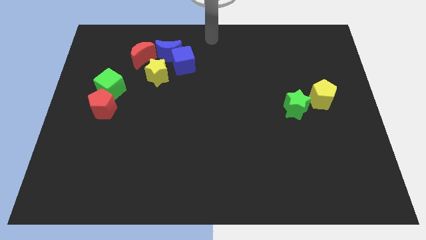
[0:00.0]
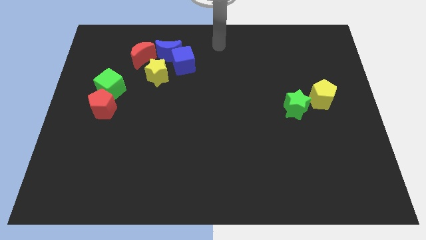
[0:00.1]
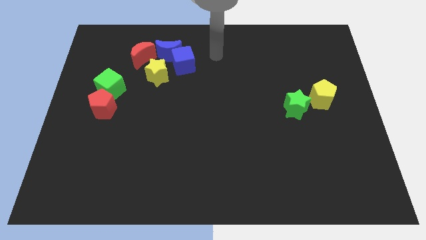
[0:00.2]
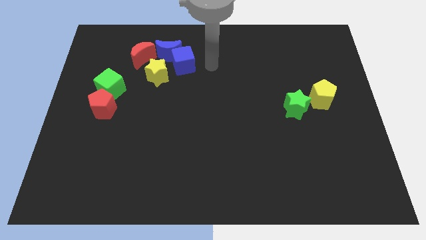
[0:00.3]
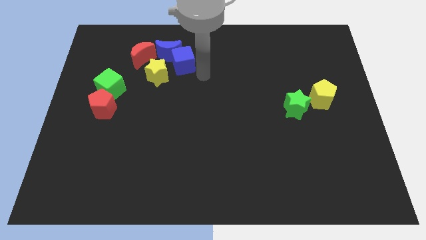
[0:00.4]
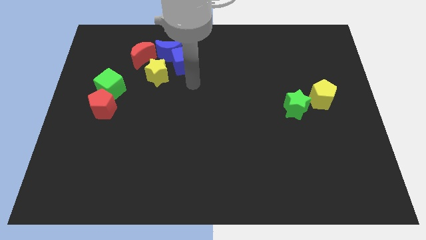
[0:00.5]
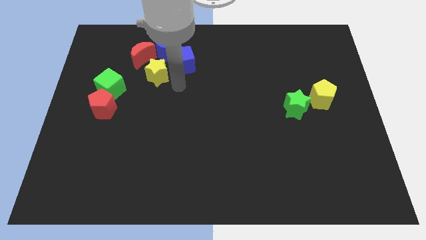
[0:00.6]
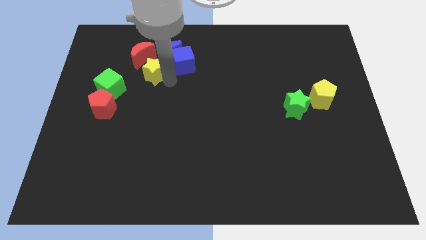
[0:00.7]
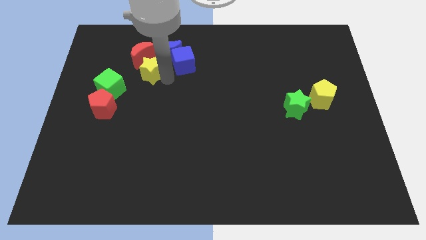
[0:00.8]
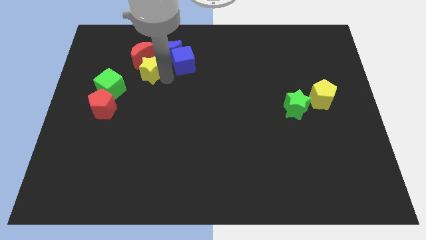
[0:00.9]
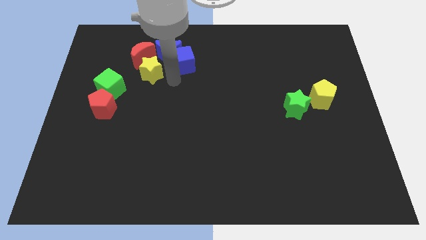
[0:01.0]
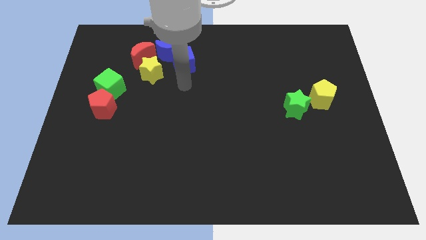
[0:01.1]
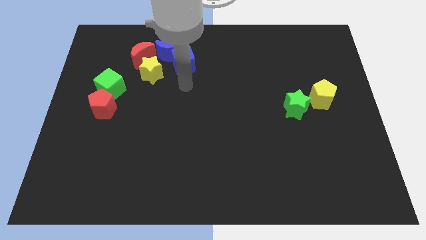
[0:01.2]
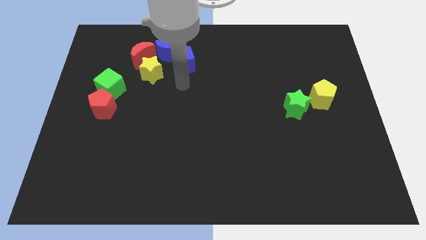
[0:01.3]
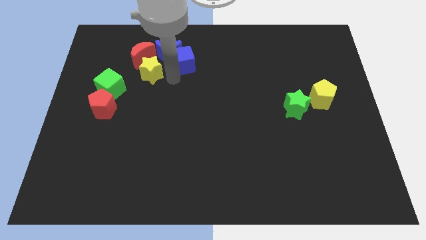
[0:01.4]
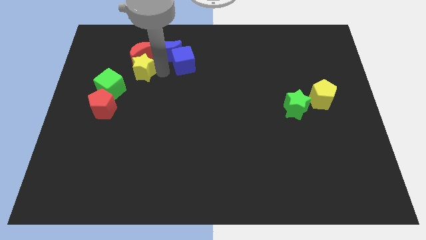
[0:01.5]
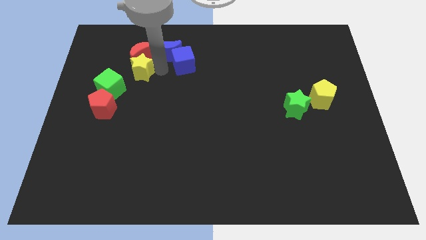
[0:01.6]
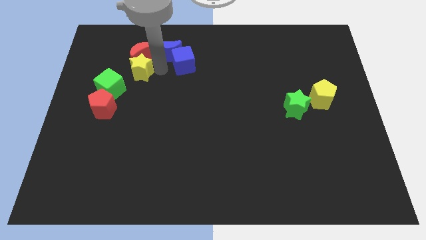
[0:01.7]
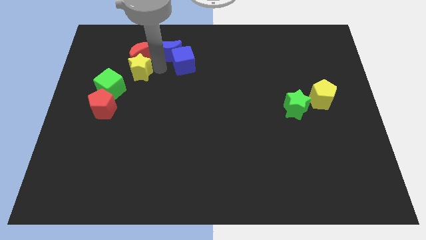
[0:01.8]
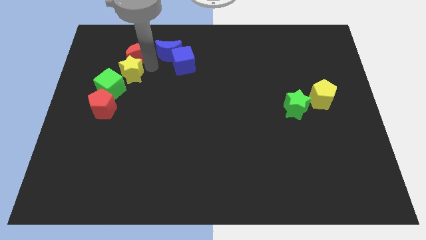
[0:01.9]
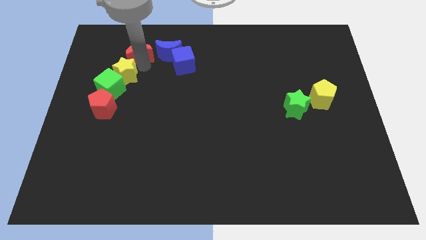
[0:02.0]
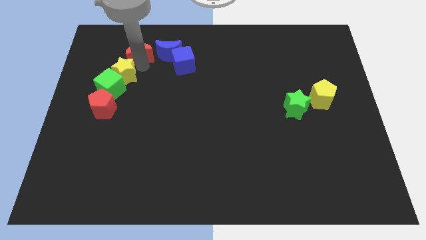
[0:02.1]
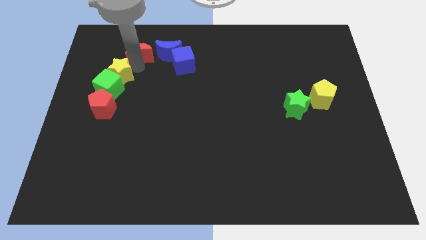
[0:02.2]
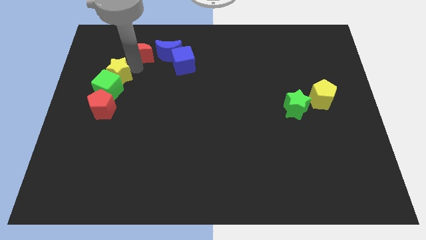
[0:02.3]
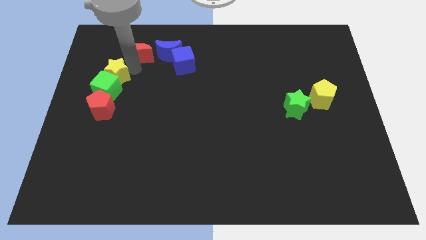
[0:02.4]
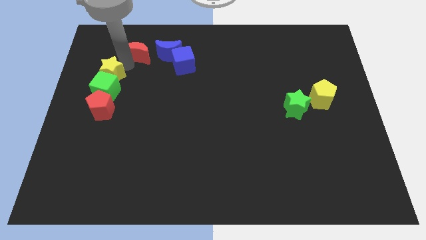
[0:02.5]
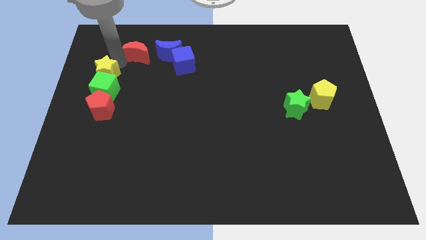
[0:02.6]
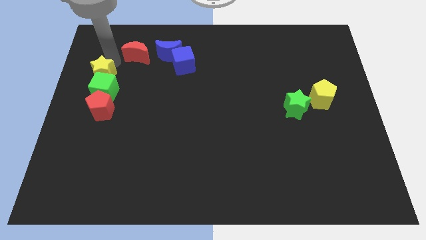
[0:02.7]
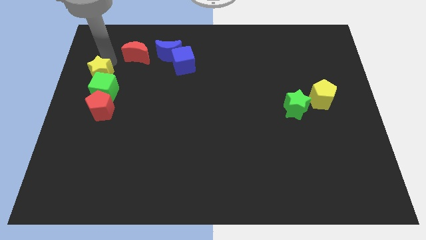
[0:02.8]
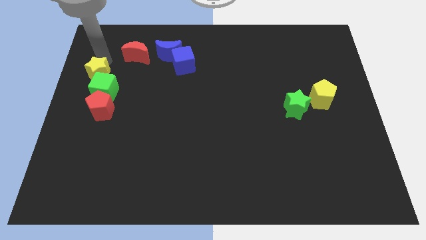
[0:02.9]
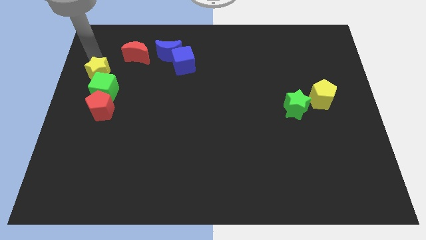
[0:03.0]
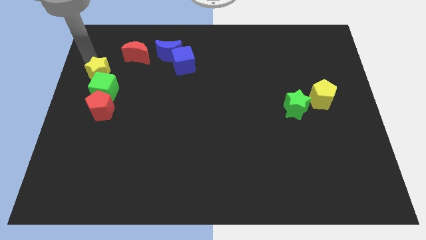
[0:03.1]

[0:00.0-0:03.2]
place the yellow star above the green cube

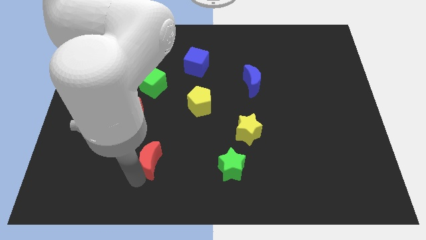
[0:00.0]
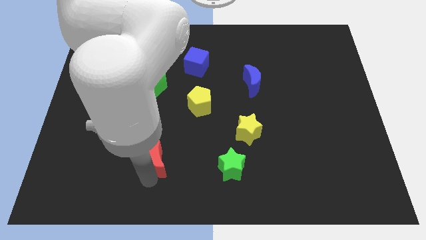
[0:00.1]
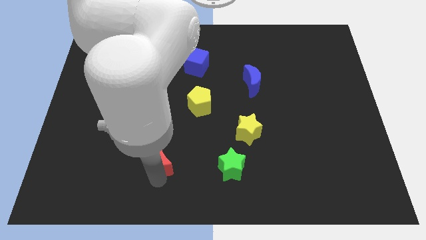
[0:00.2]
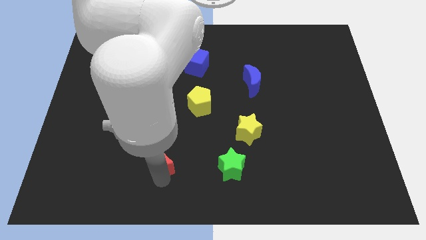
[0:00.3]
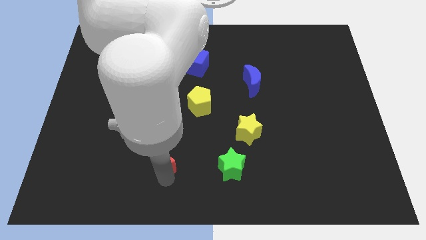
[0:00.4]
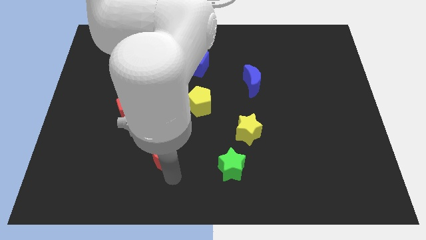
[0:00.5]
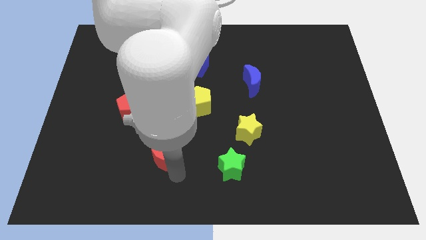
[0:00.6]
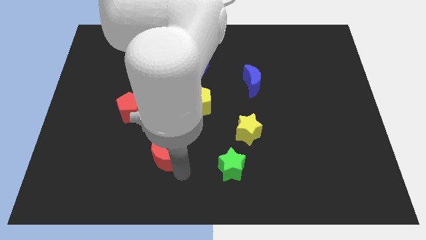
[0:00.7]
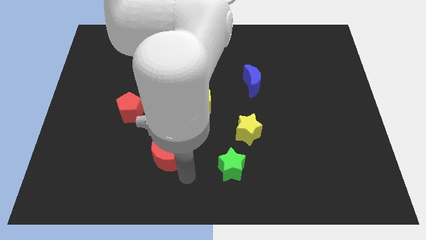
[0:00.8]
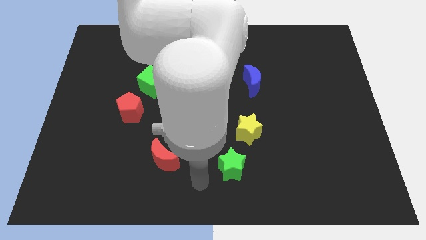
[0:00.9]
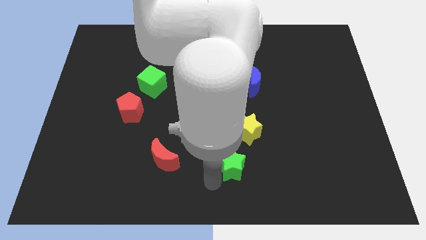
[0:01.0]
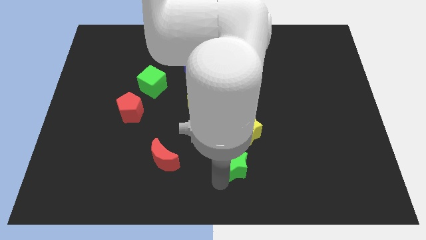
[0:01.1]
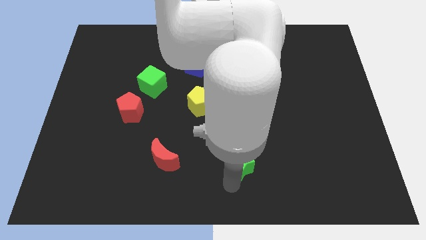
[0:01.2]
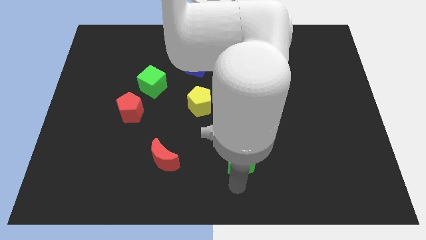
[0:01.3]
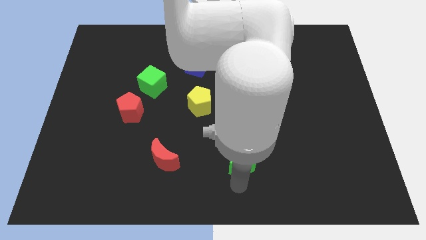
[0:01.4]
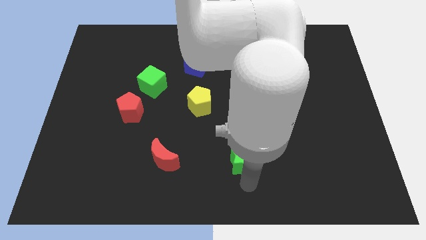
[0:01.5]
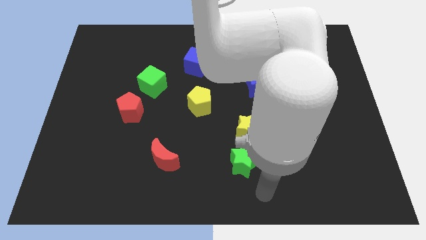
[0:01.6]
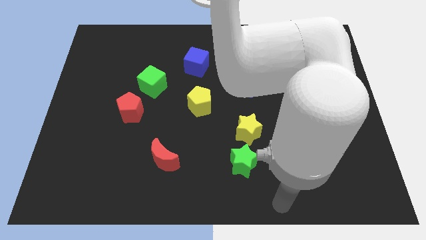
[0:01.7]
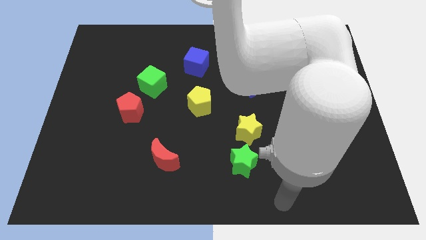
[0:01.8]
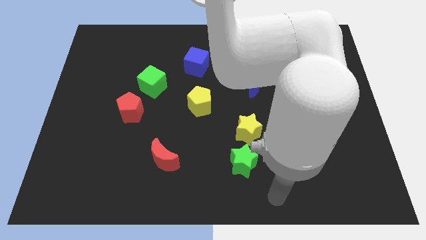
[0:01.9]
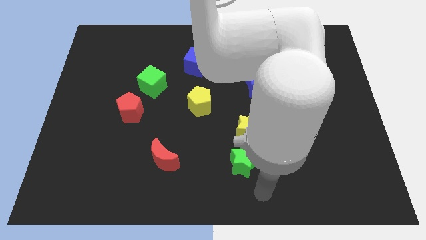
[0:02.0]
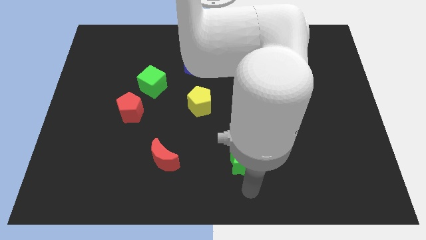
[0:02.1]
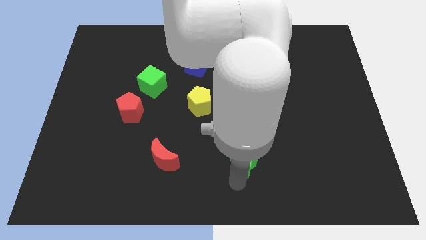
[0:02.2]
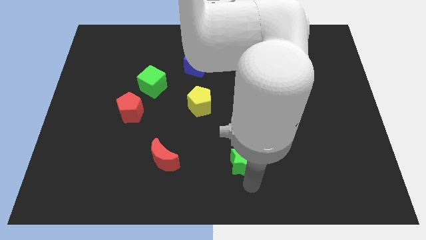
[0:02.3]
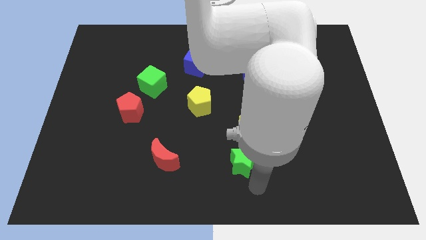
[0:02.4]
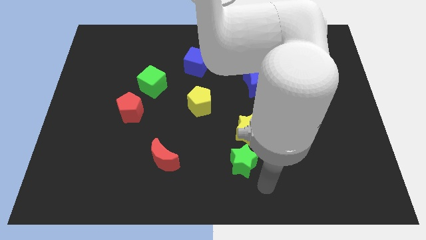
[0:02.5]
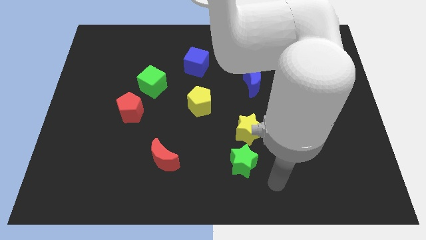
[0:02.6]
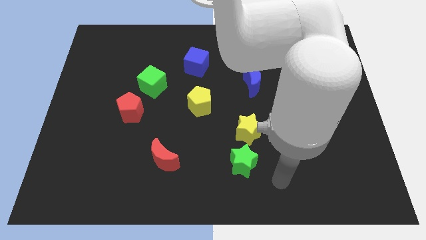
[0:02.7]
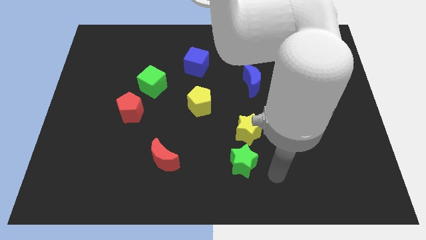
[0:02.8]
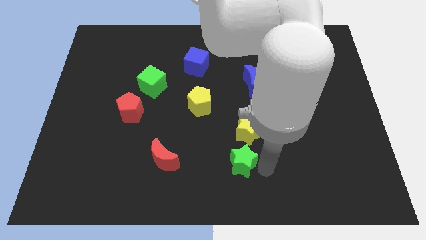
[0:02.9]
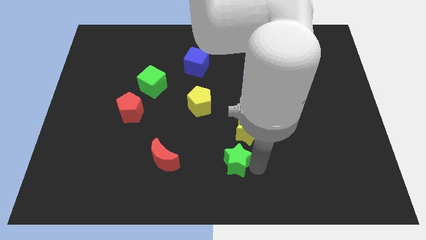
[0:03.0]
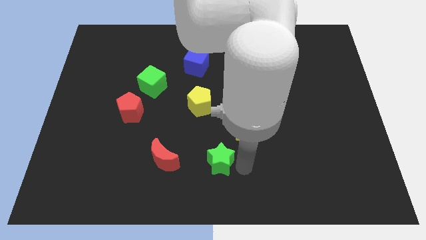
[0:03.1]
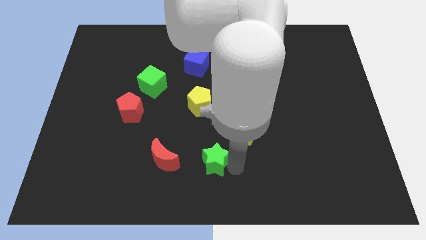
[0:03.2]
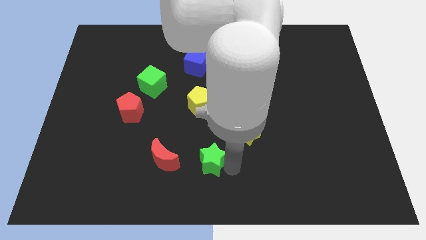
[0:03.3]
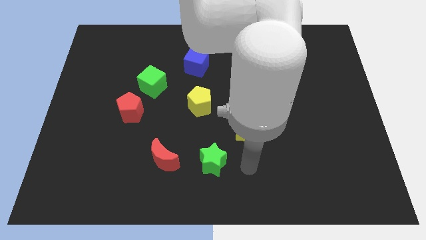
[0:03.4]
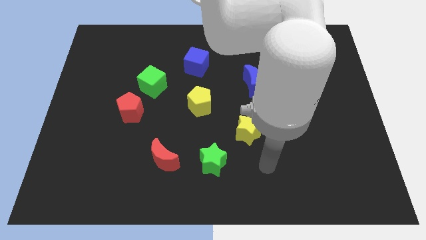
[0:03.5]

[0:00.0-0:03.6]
place the green star to the right side of the red moon

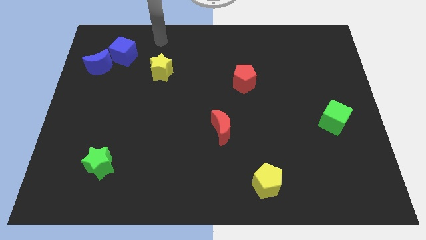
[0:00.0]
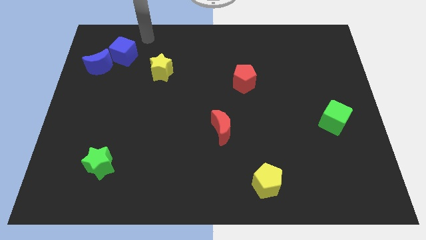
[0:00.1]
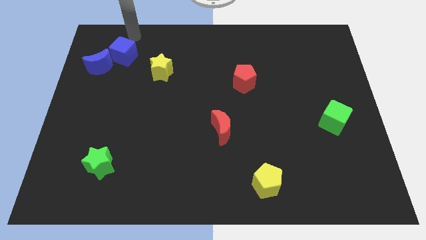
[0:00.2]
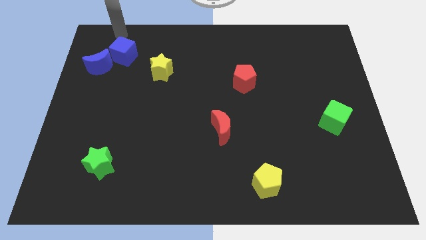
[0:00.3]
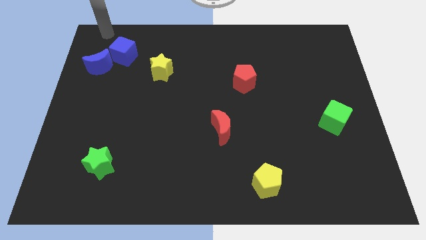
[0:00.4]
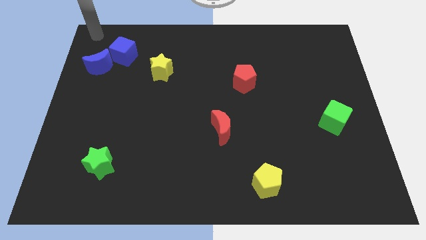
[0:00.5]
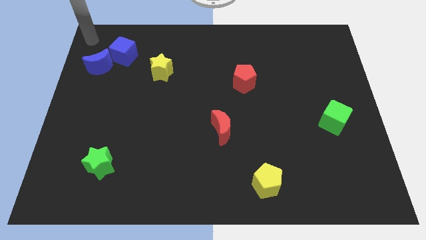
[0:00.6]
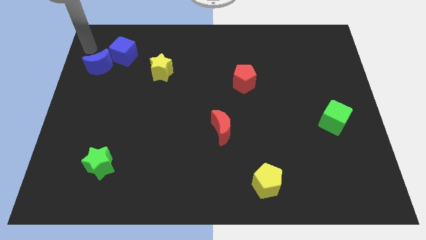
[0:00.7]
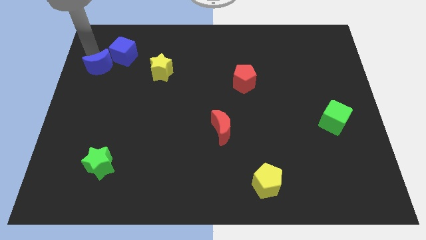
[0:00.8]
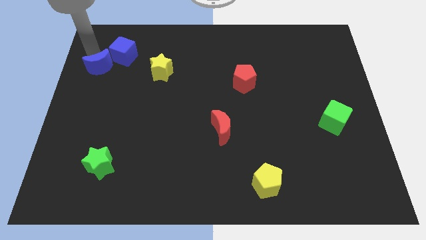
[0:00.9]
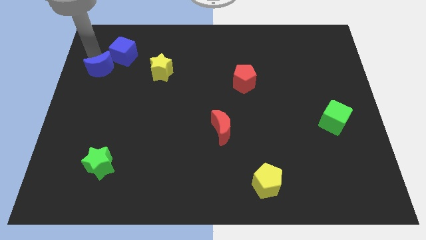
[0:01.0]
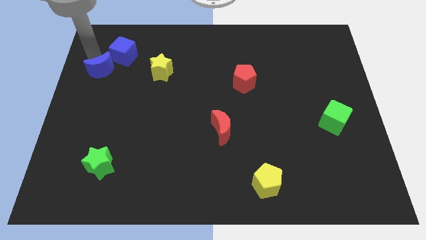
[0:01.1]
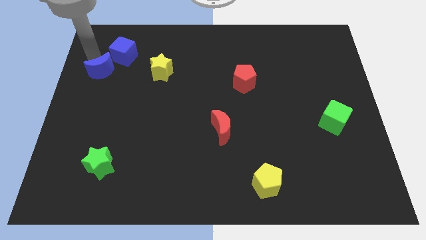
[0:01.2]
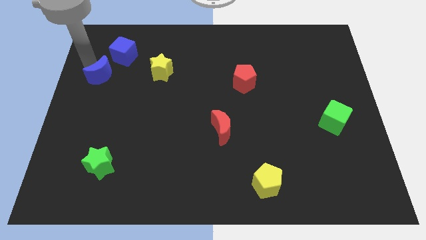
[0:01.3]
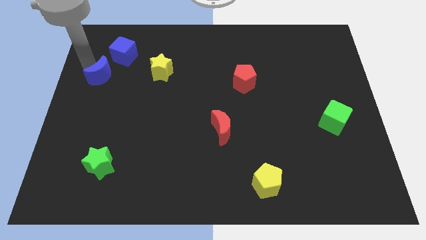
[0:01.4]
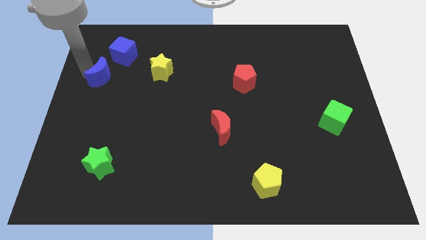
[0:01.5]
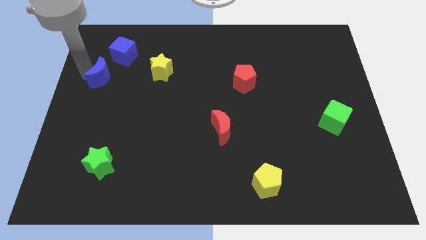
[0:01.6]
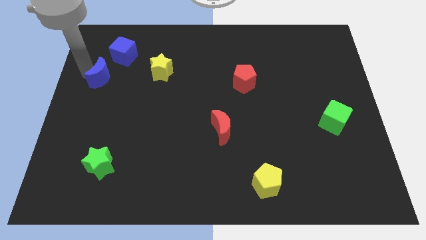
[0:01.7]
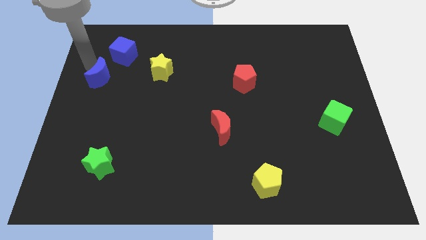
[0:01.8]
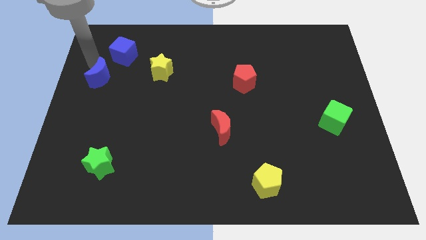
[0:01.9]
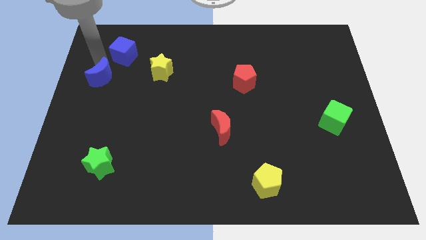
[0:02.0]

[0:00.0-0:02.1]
slightly push the blue crescent downwards
